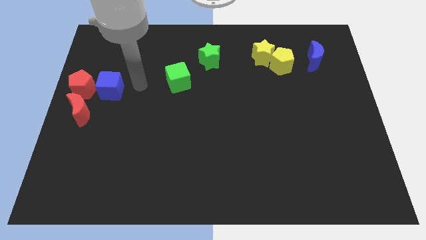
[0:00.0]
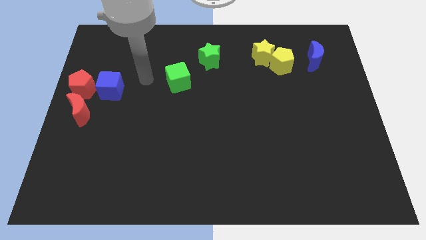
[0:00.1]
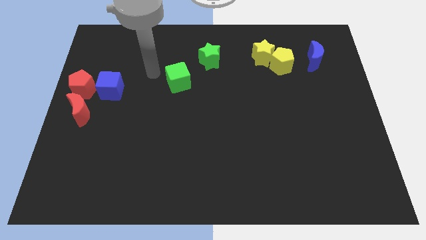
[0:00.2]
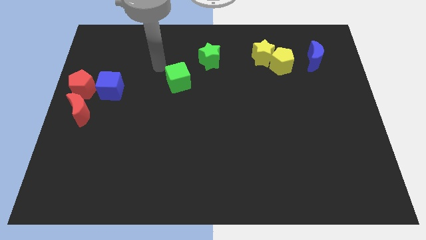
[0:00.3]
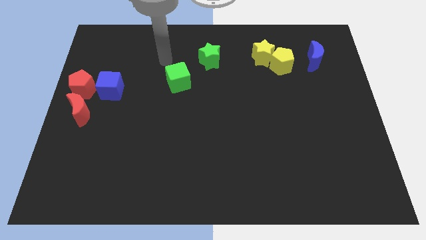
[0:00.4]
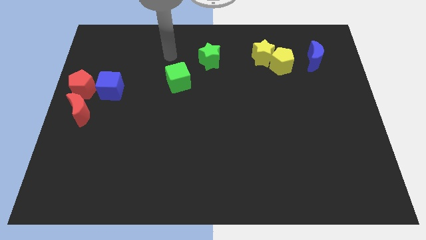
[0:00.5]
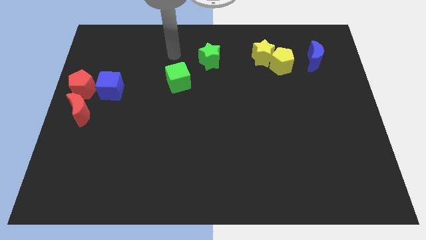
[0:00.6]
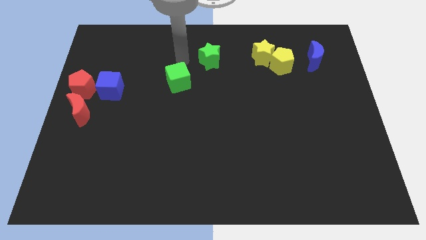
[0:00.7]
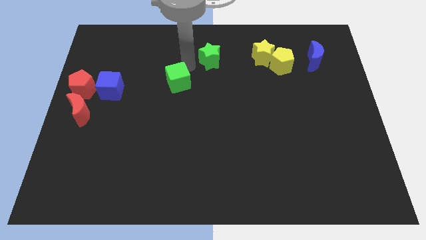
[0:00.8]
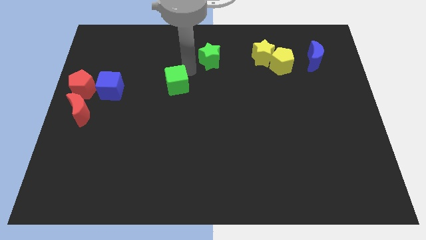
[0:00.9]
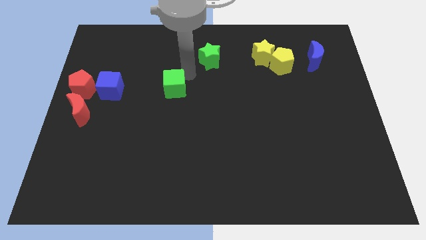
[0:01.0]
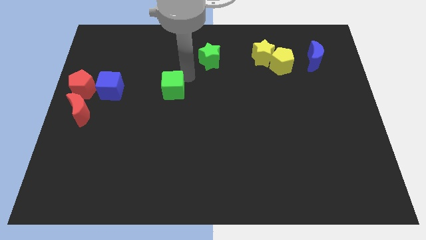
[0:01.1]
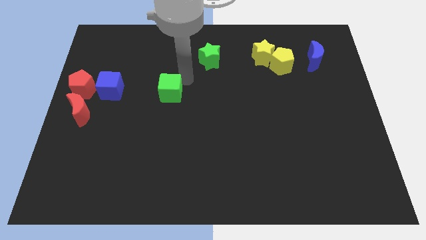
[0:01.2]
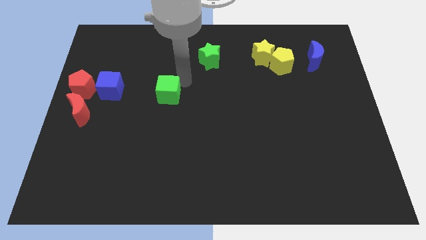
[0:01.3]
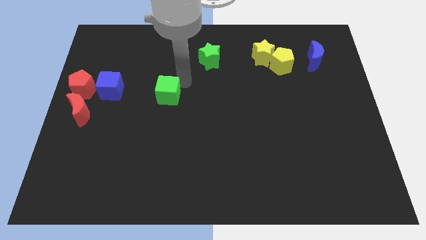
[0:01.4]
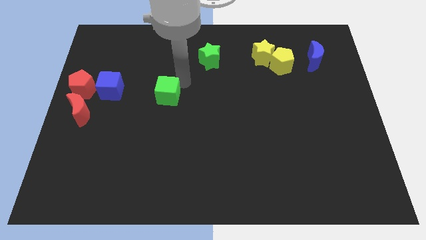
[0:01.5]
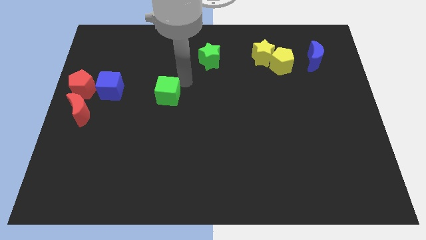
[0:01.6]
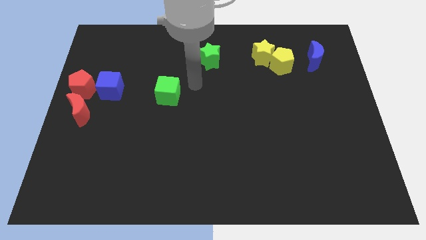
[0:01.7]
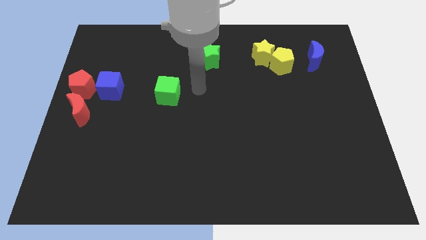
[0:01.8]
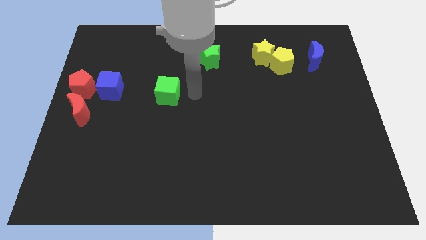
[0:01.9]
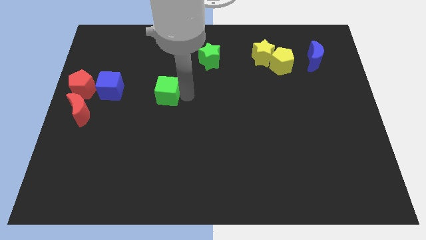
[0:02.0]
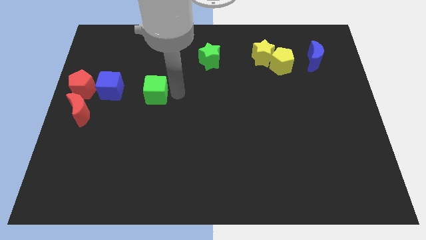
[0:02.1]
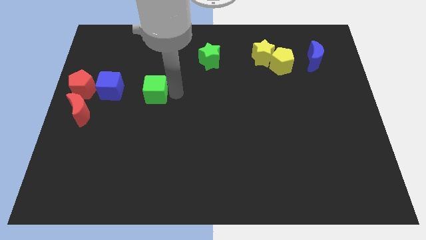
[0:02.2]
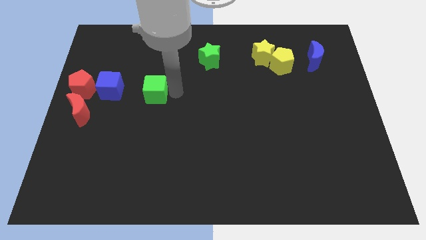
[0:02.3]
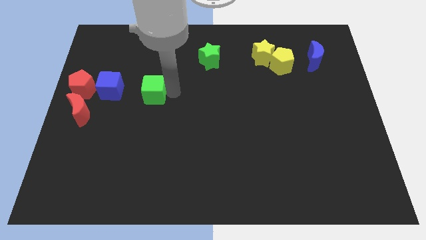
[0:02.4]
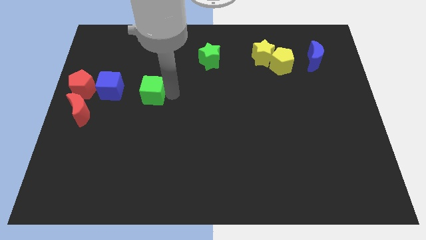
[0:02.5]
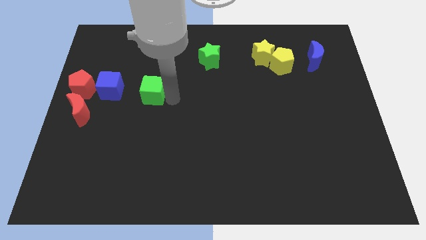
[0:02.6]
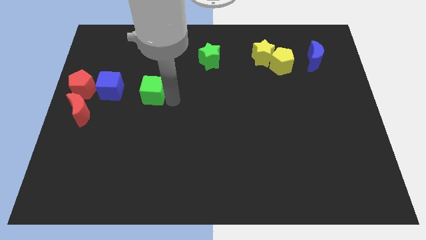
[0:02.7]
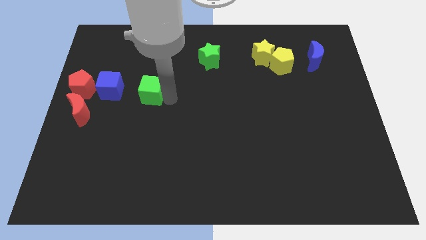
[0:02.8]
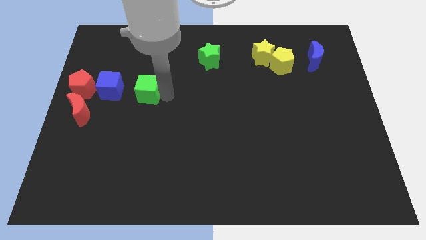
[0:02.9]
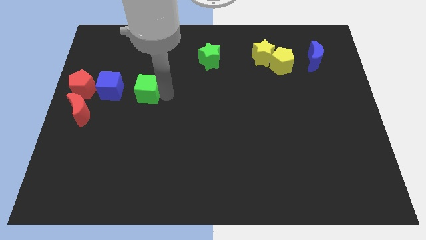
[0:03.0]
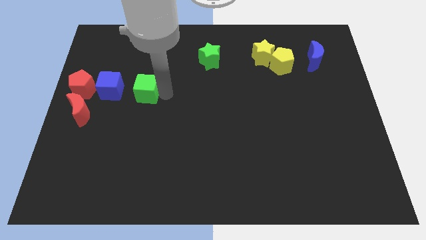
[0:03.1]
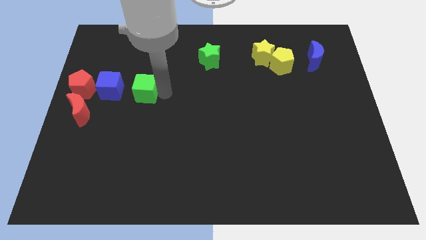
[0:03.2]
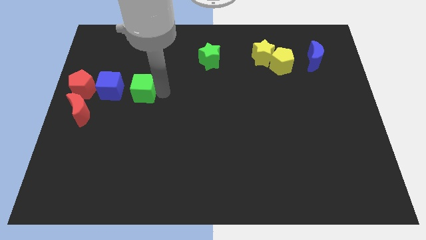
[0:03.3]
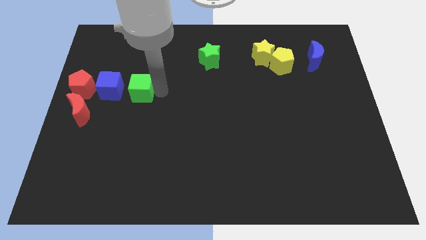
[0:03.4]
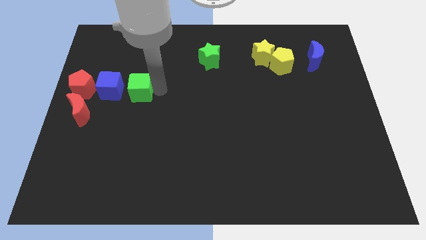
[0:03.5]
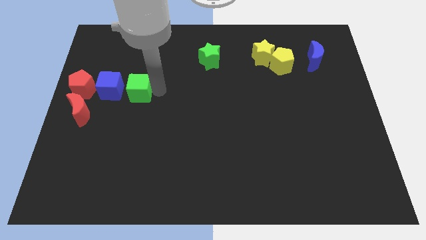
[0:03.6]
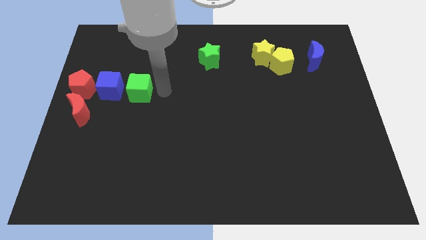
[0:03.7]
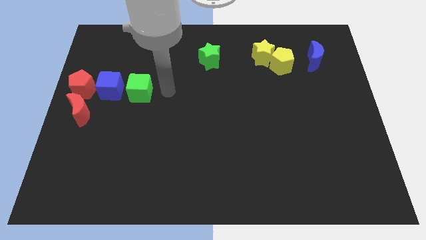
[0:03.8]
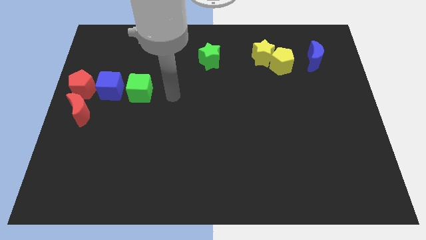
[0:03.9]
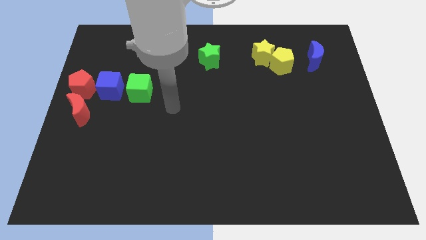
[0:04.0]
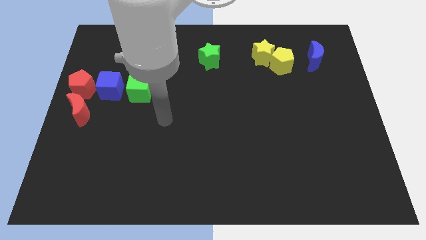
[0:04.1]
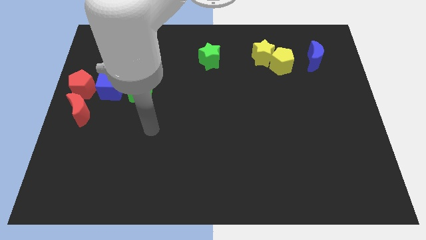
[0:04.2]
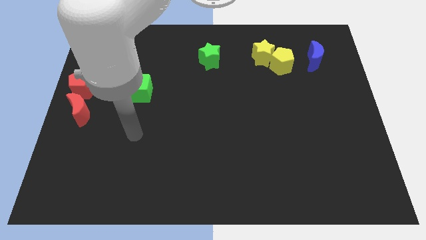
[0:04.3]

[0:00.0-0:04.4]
push the green cube to the right of the blue cube

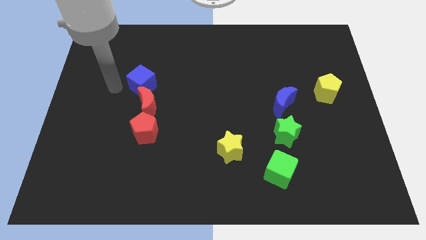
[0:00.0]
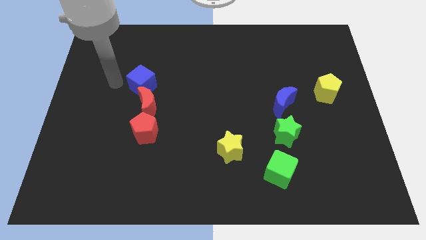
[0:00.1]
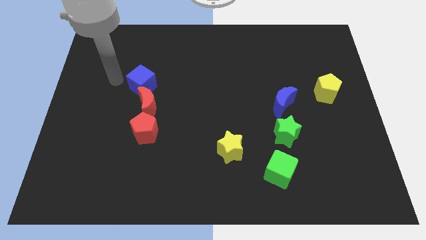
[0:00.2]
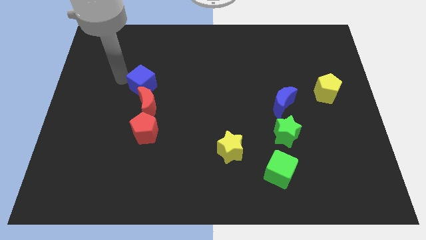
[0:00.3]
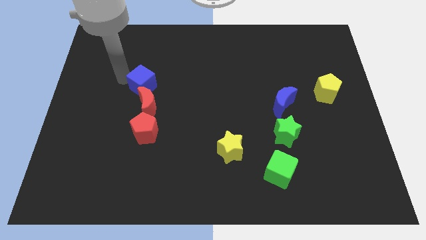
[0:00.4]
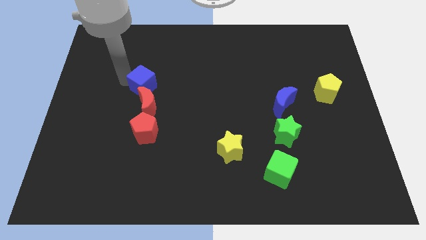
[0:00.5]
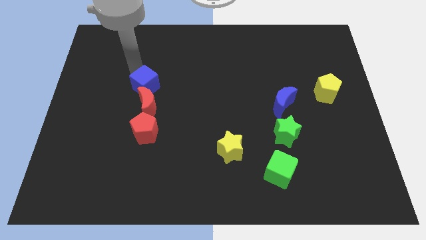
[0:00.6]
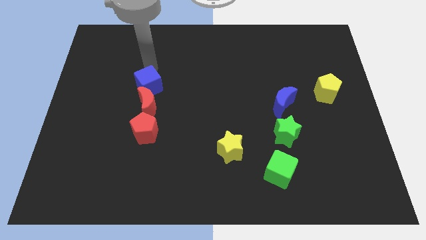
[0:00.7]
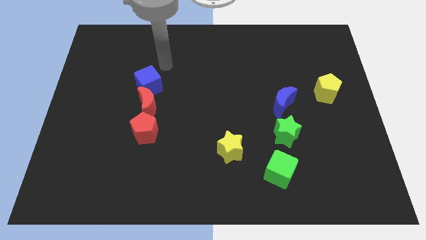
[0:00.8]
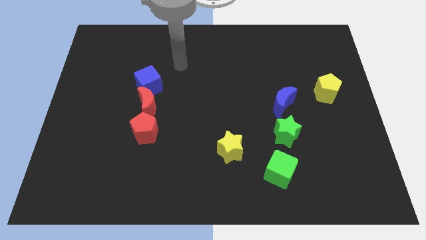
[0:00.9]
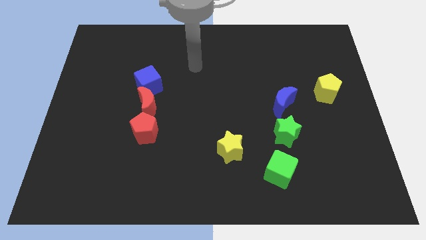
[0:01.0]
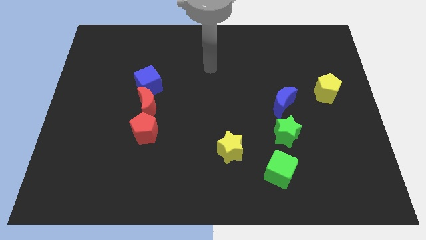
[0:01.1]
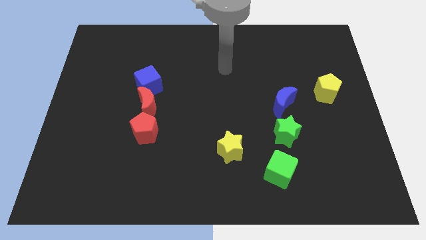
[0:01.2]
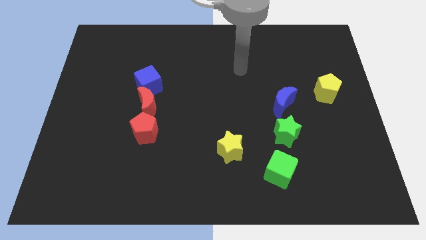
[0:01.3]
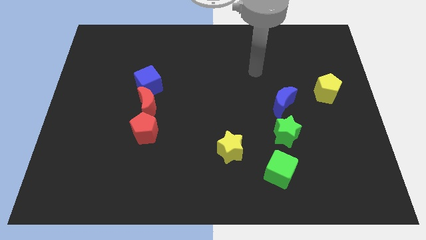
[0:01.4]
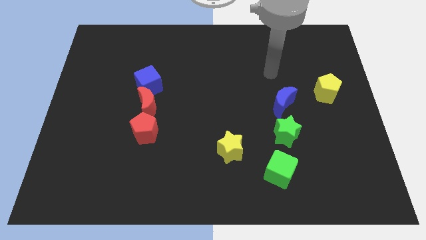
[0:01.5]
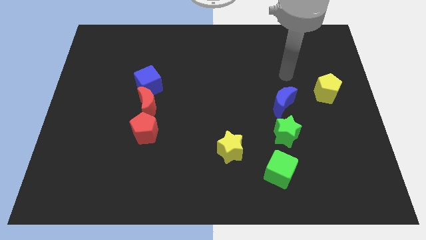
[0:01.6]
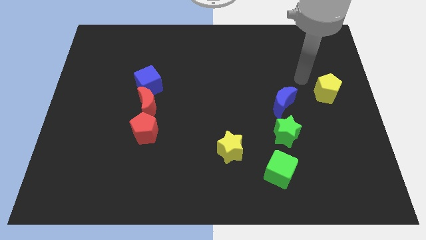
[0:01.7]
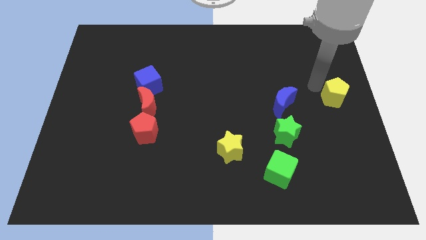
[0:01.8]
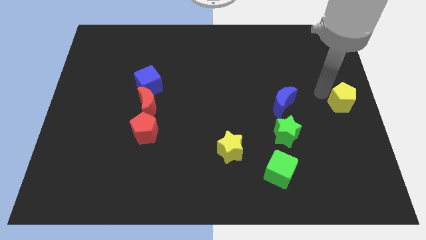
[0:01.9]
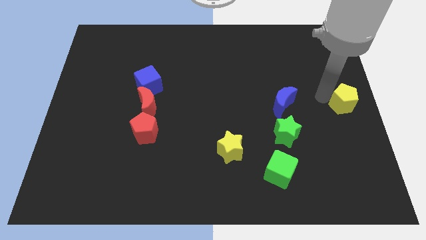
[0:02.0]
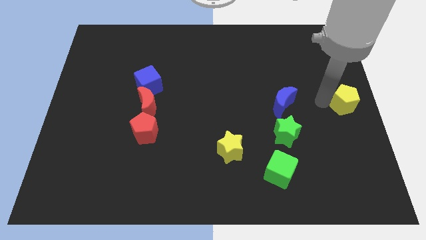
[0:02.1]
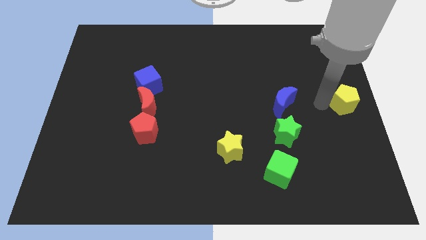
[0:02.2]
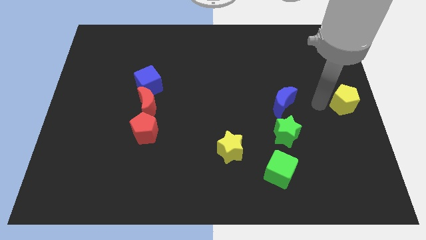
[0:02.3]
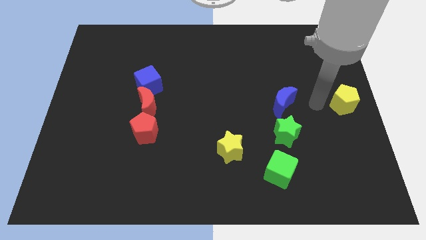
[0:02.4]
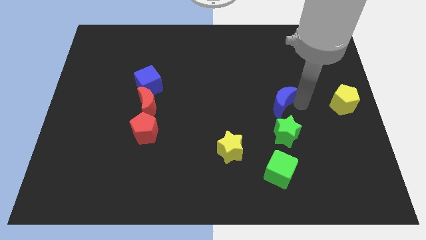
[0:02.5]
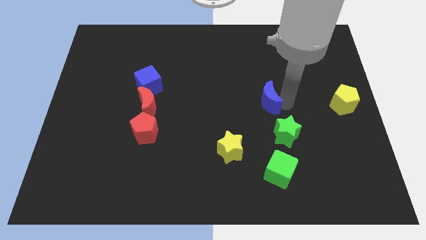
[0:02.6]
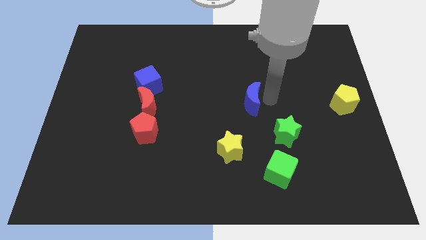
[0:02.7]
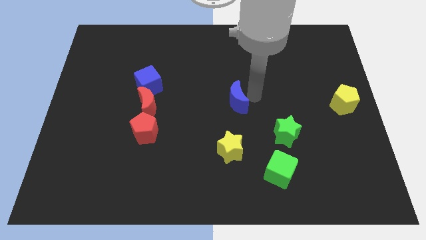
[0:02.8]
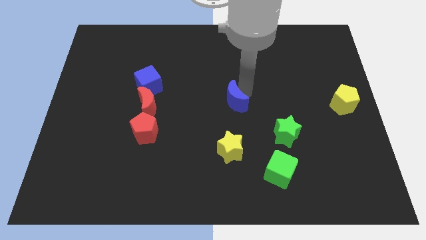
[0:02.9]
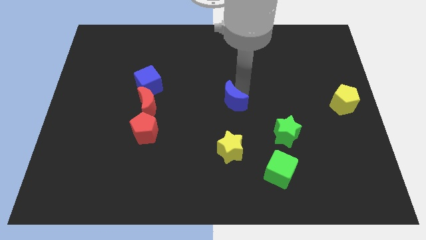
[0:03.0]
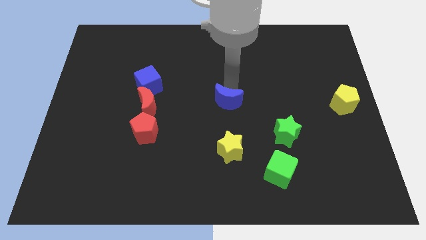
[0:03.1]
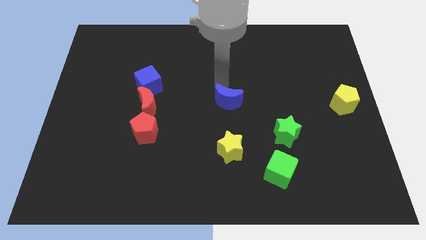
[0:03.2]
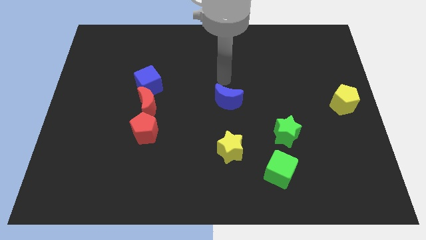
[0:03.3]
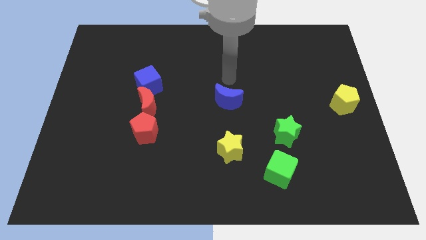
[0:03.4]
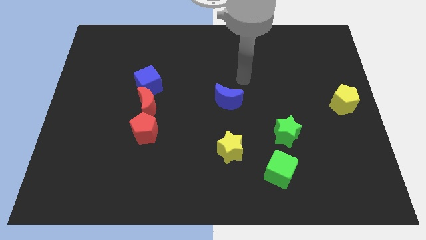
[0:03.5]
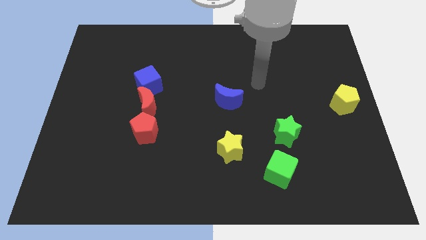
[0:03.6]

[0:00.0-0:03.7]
move the blue crescent to the center of the board

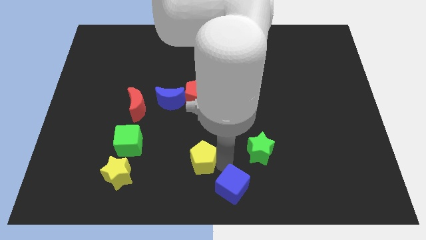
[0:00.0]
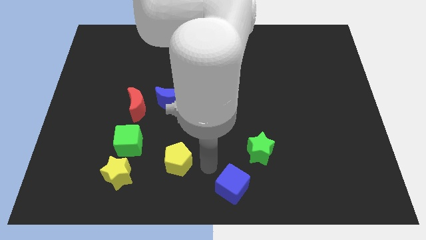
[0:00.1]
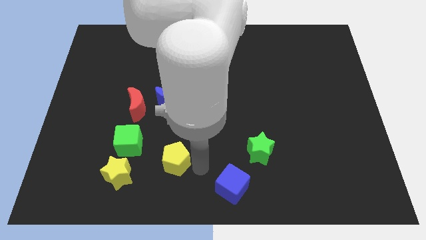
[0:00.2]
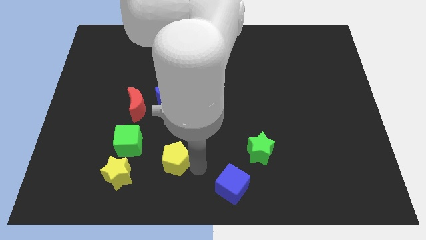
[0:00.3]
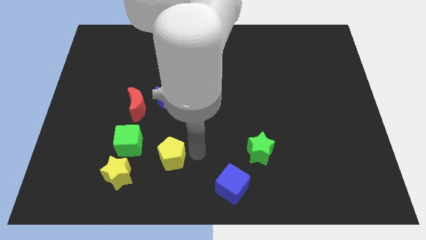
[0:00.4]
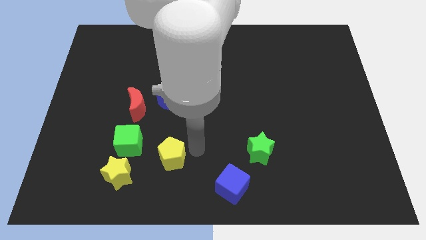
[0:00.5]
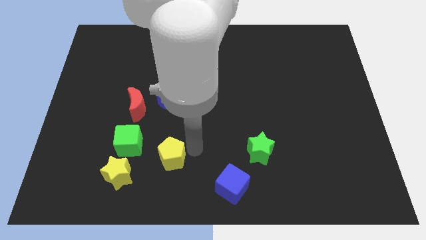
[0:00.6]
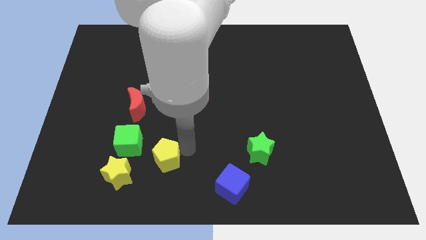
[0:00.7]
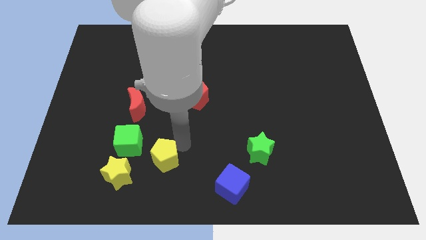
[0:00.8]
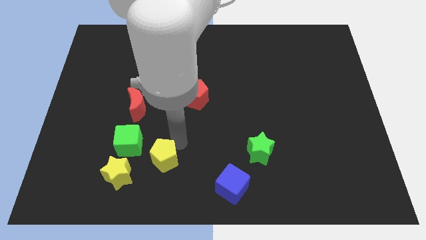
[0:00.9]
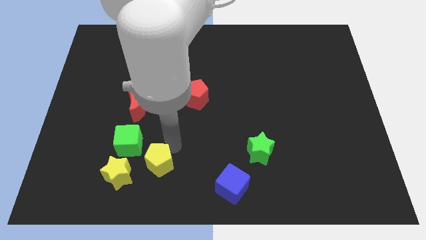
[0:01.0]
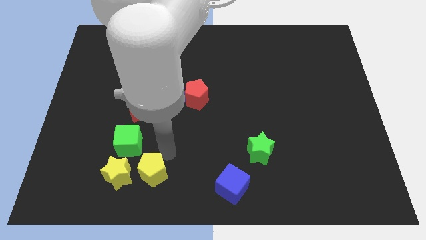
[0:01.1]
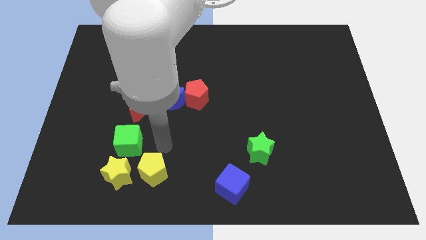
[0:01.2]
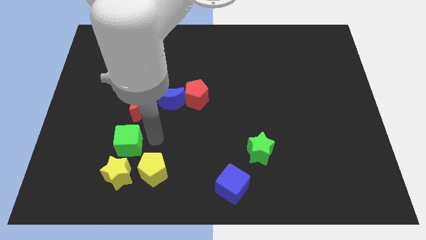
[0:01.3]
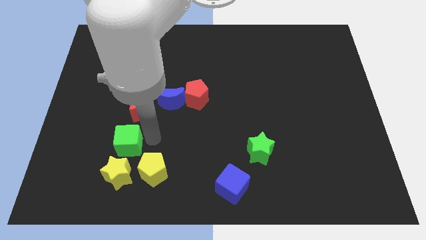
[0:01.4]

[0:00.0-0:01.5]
place the yellow pentagon right to the yellow star
